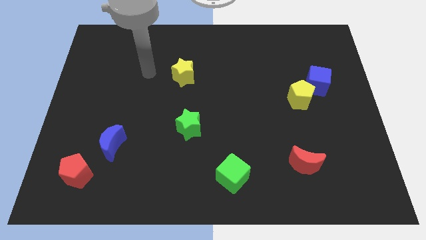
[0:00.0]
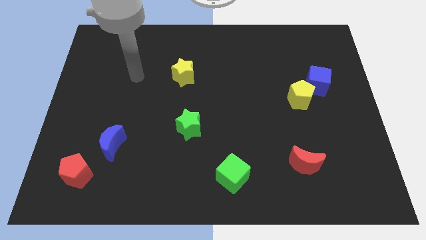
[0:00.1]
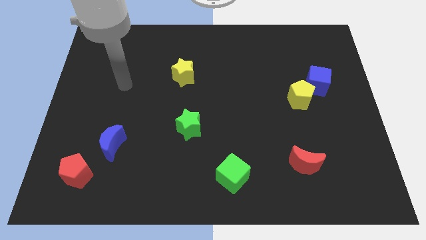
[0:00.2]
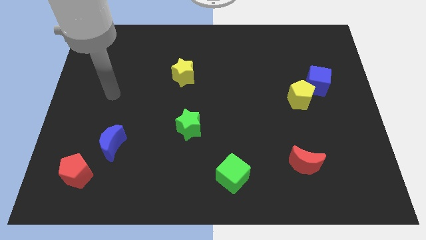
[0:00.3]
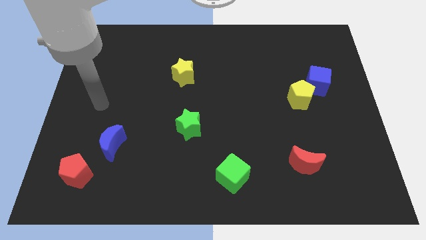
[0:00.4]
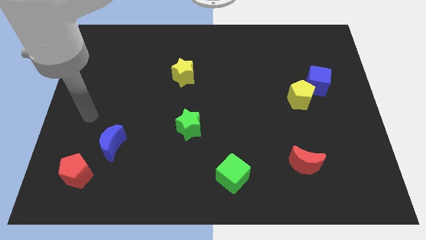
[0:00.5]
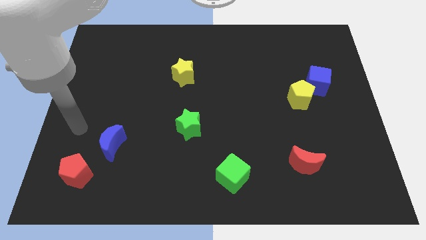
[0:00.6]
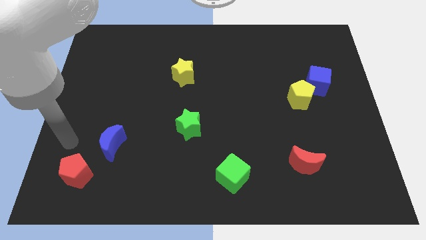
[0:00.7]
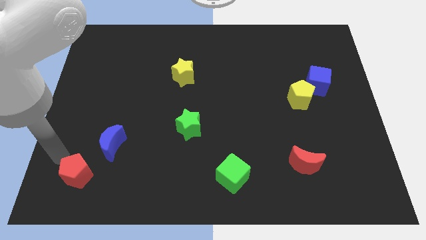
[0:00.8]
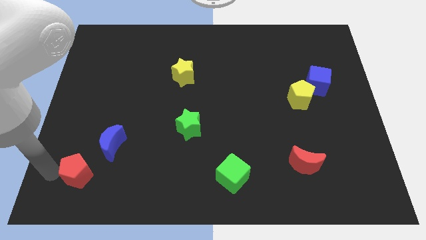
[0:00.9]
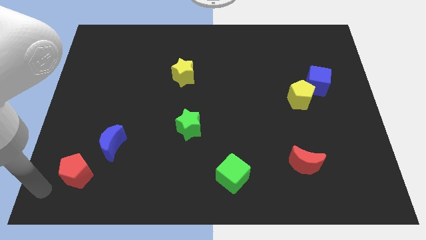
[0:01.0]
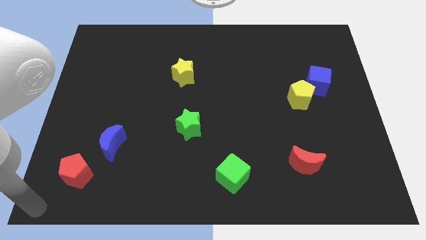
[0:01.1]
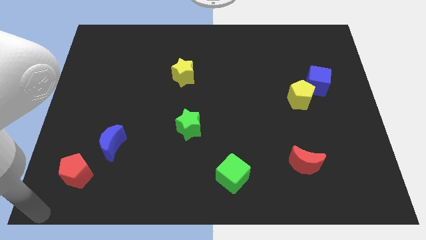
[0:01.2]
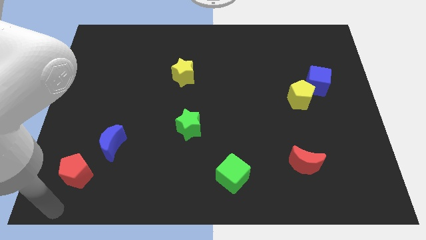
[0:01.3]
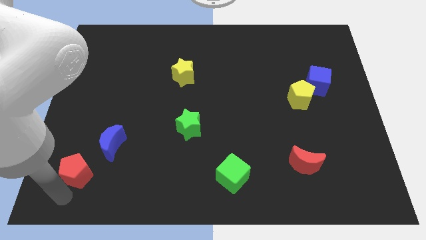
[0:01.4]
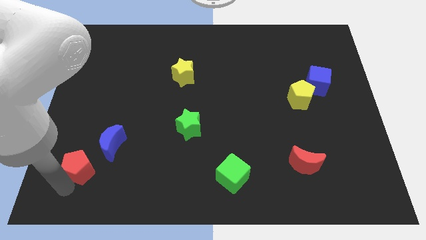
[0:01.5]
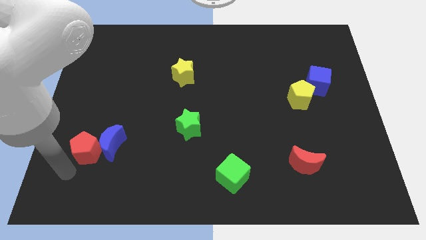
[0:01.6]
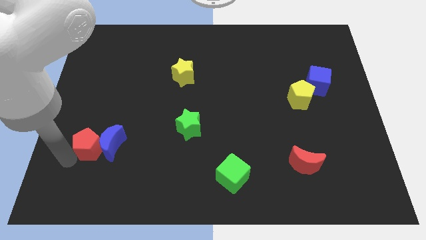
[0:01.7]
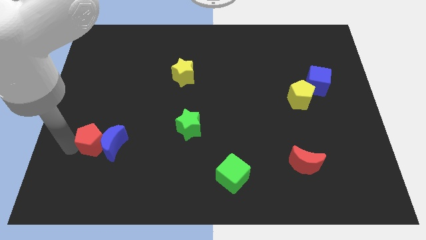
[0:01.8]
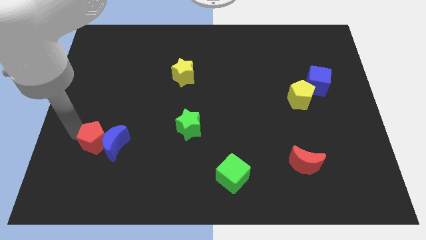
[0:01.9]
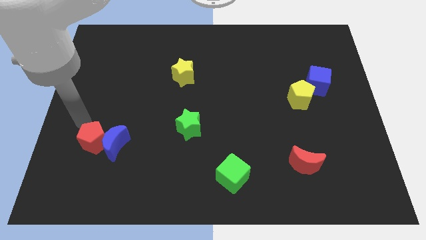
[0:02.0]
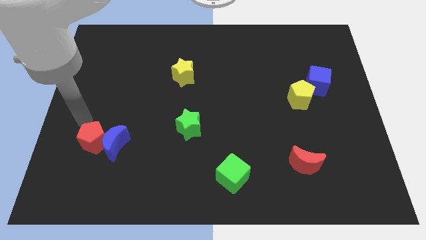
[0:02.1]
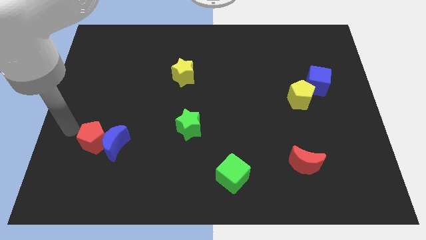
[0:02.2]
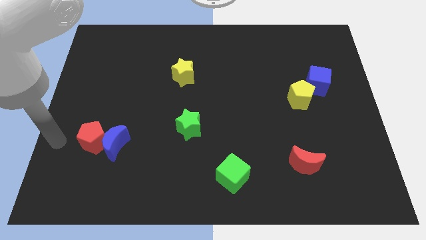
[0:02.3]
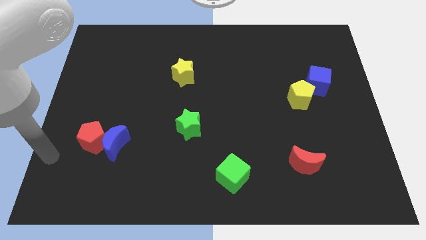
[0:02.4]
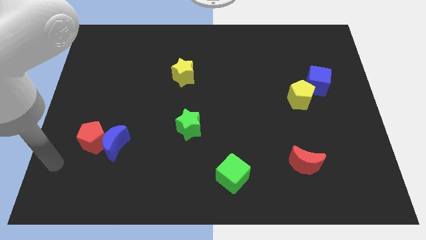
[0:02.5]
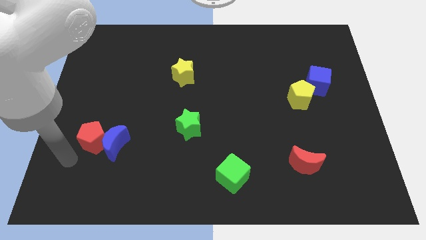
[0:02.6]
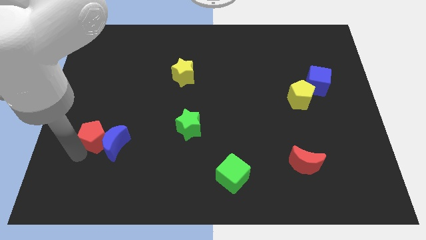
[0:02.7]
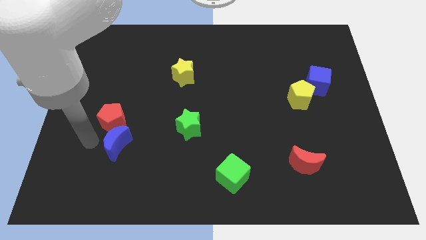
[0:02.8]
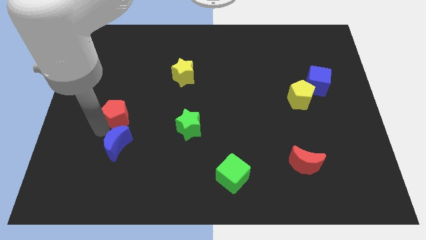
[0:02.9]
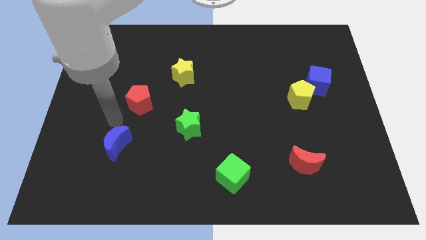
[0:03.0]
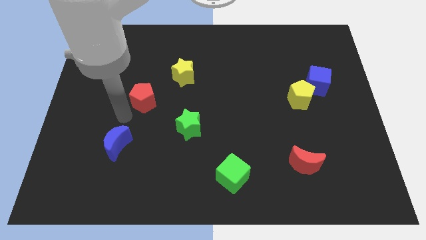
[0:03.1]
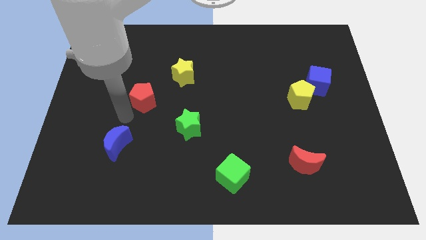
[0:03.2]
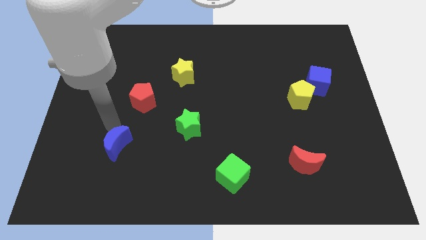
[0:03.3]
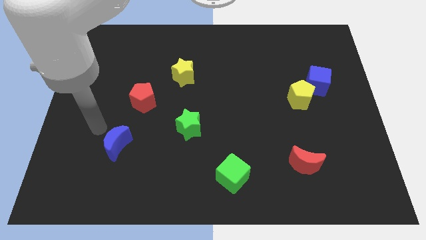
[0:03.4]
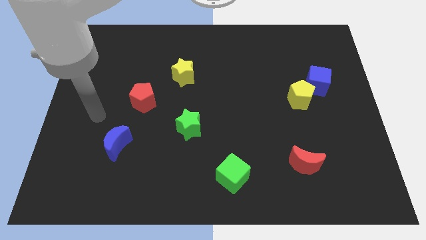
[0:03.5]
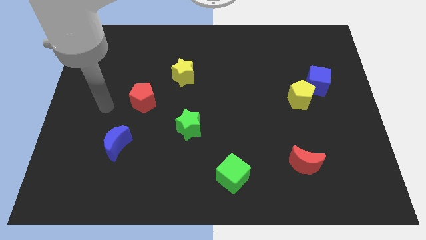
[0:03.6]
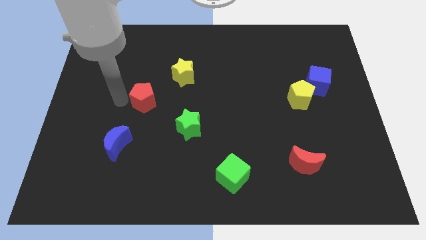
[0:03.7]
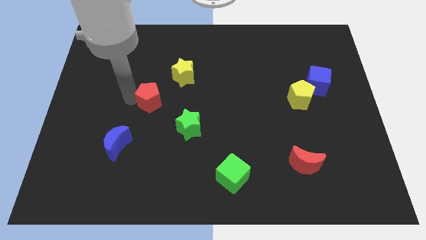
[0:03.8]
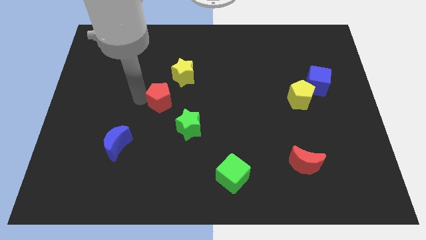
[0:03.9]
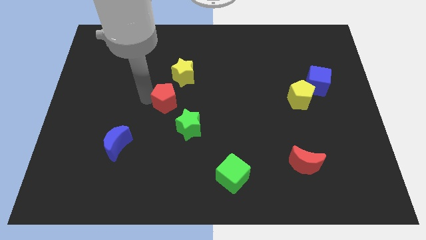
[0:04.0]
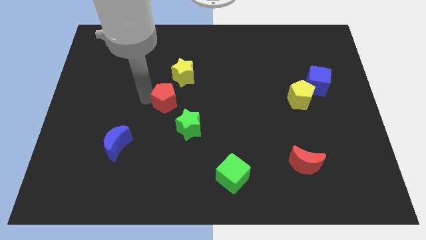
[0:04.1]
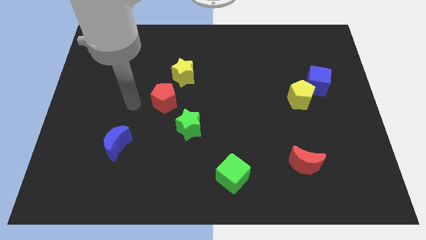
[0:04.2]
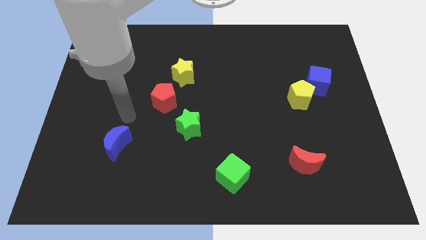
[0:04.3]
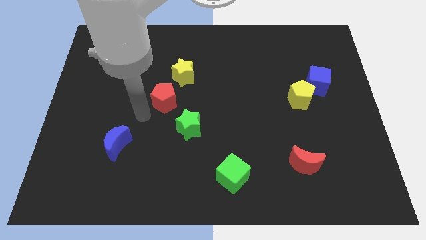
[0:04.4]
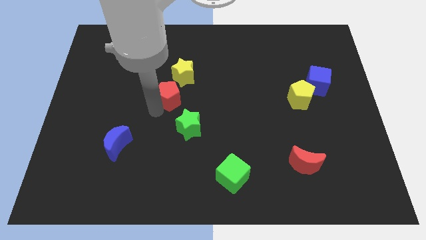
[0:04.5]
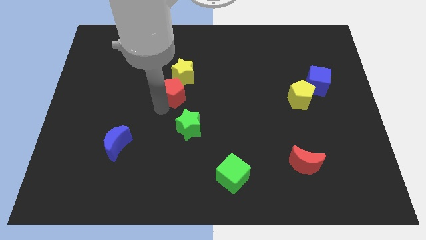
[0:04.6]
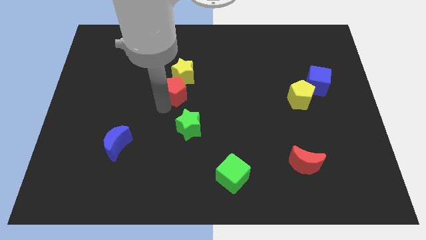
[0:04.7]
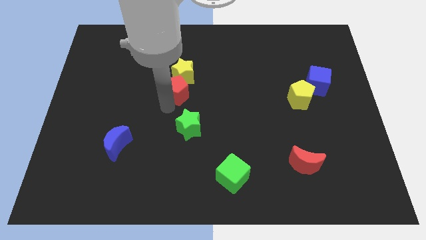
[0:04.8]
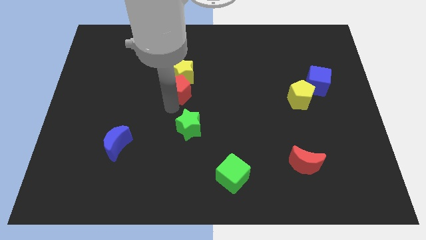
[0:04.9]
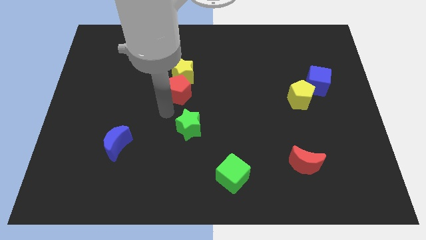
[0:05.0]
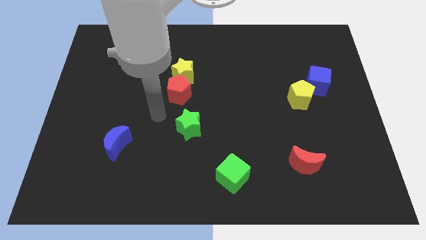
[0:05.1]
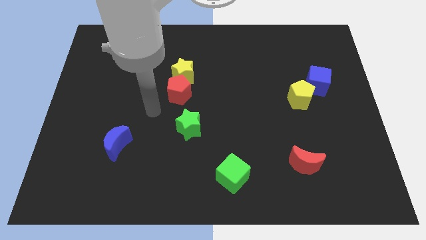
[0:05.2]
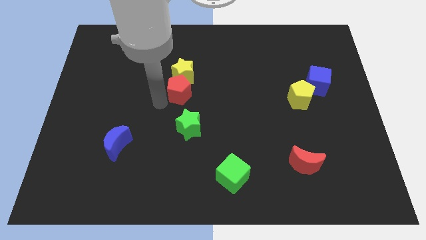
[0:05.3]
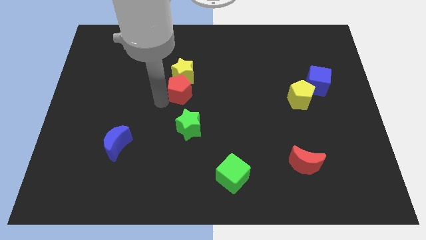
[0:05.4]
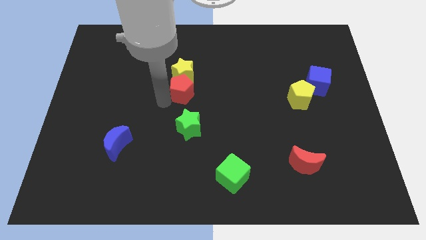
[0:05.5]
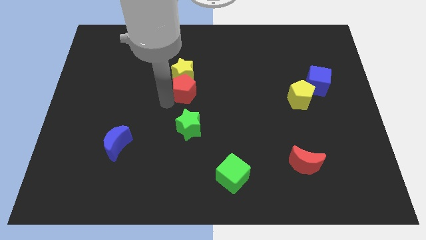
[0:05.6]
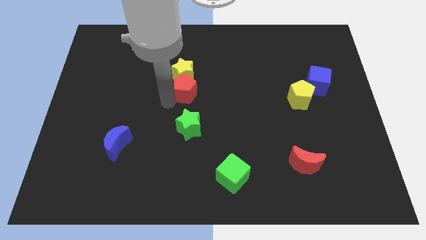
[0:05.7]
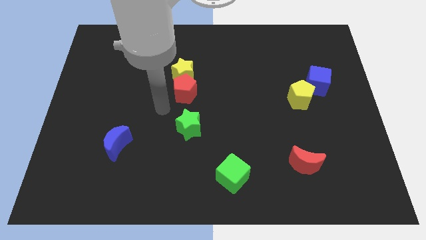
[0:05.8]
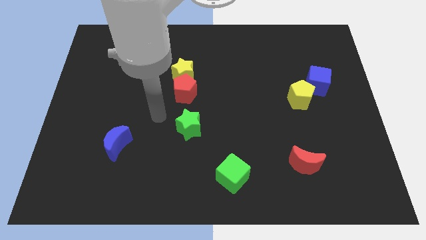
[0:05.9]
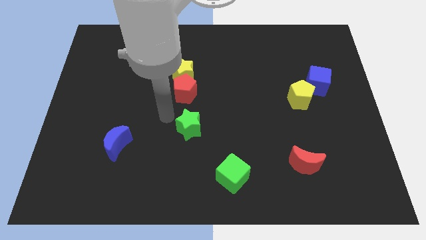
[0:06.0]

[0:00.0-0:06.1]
move the red pentagon below to the yellow star

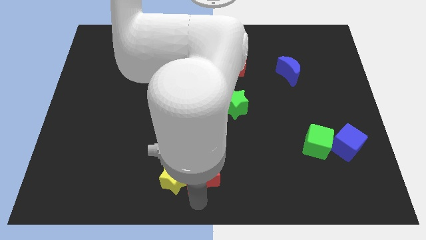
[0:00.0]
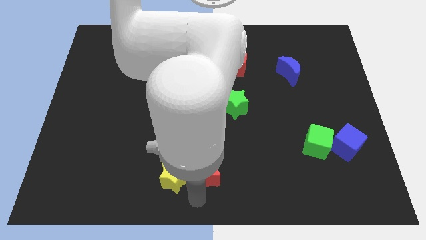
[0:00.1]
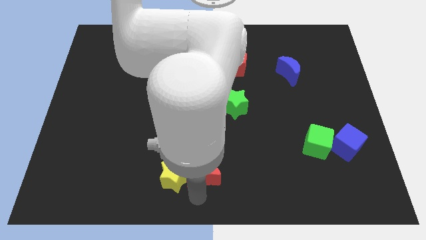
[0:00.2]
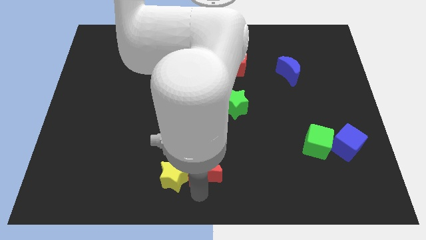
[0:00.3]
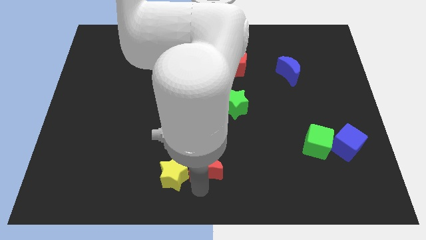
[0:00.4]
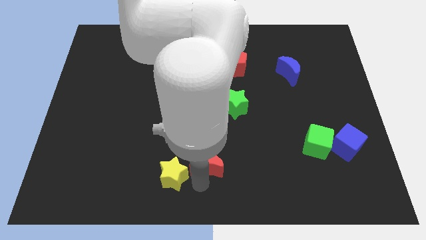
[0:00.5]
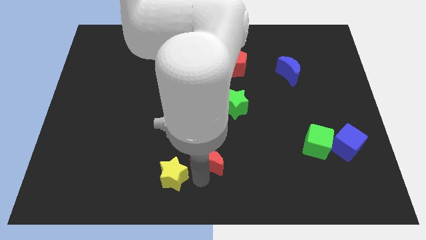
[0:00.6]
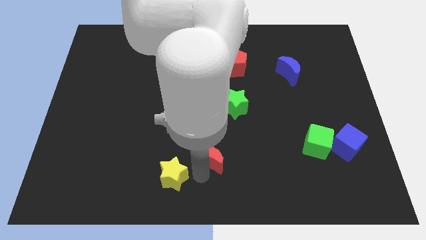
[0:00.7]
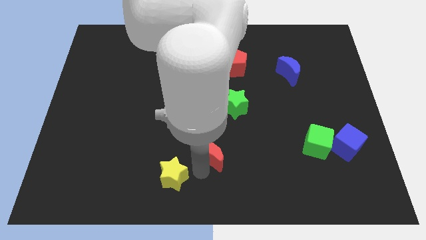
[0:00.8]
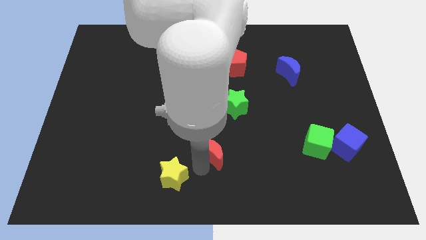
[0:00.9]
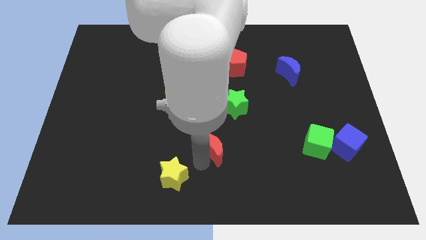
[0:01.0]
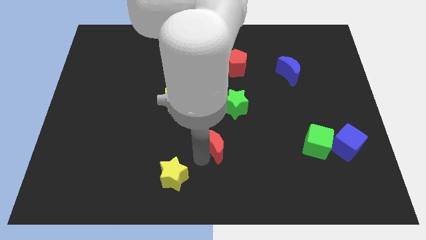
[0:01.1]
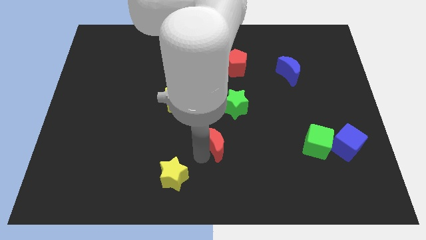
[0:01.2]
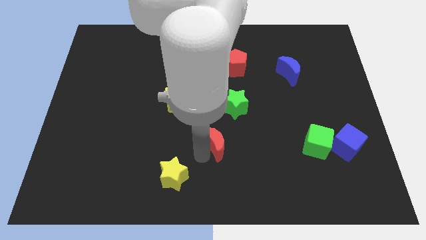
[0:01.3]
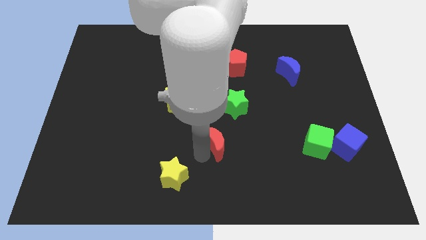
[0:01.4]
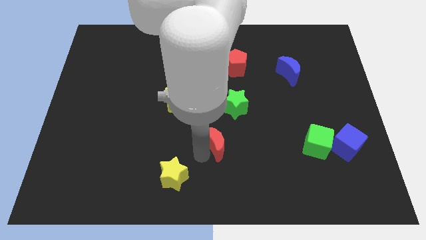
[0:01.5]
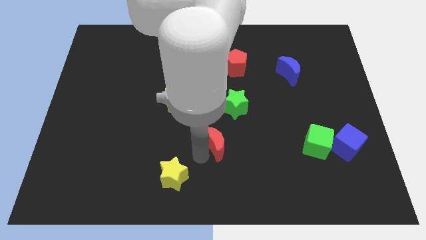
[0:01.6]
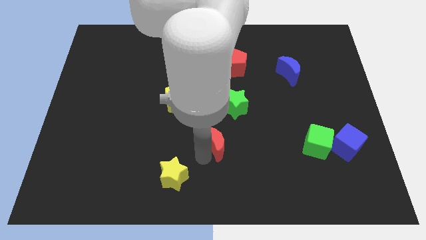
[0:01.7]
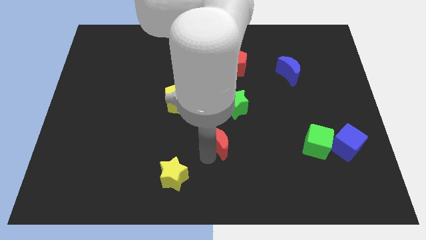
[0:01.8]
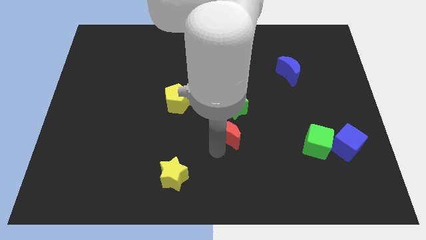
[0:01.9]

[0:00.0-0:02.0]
push red moon upwards

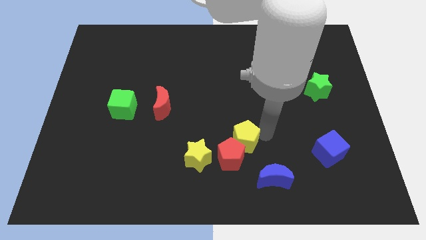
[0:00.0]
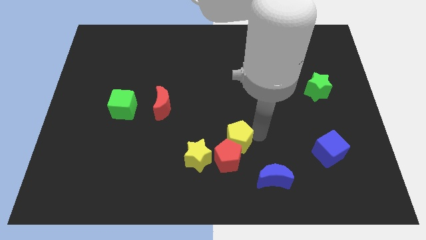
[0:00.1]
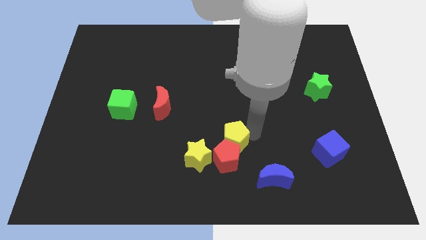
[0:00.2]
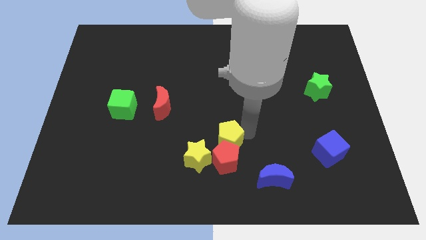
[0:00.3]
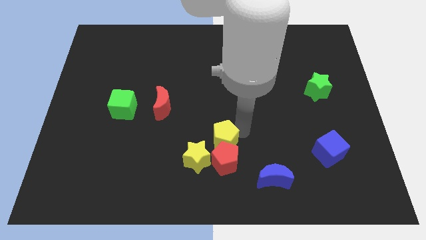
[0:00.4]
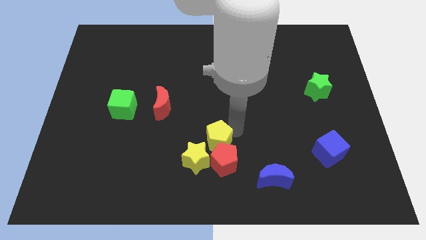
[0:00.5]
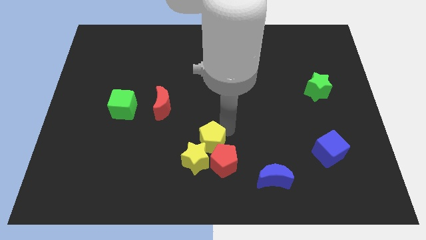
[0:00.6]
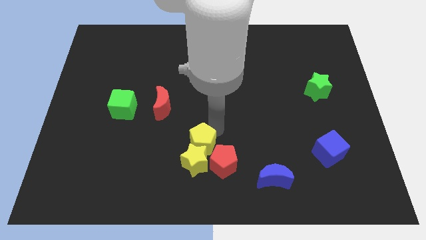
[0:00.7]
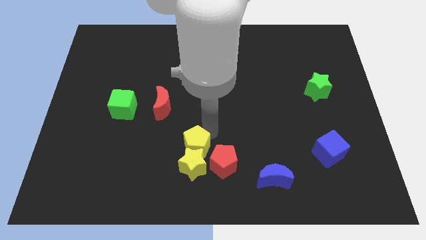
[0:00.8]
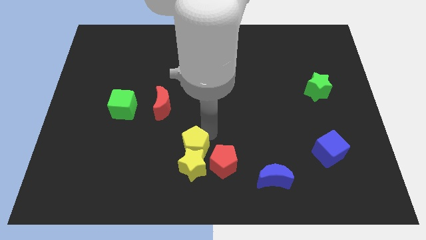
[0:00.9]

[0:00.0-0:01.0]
push the yellow pentagon into the yellow star
